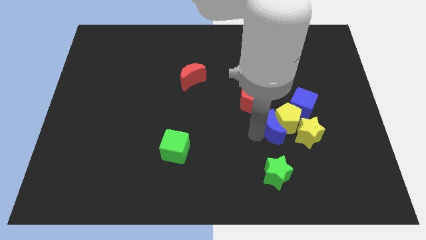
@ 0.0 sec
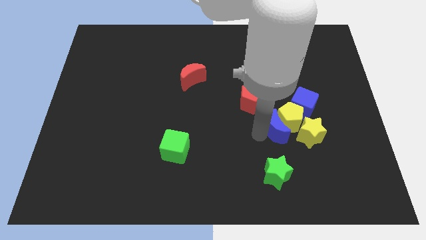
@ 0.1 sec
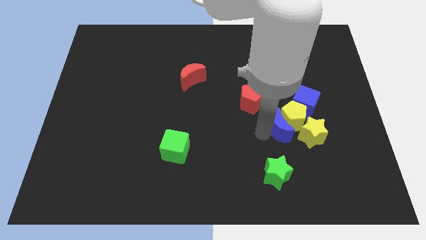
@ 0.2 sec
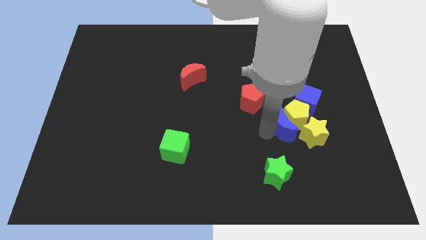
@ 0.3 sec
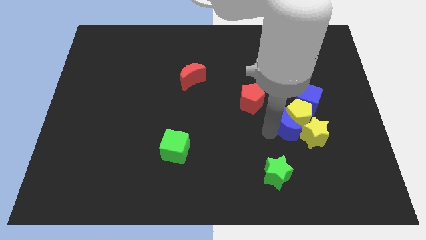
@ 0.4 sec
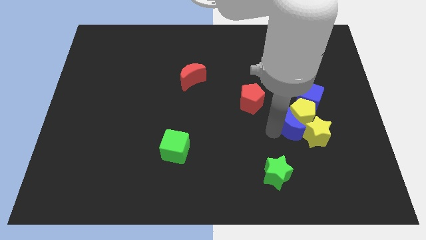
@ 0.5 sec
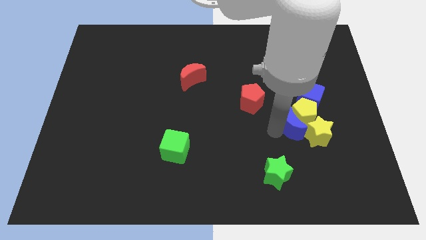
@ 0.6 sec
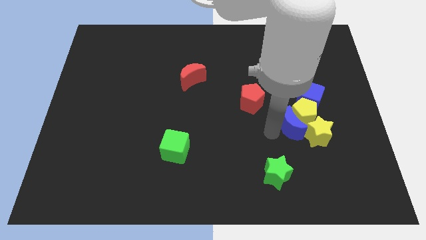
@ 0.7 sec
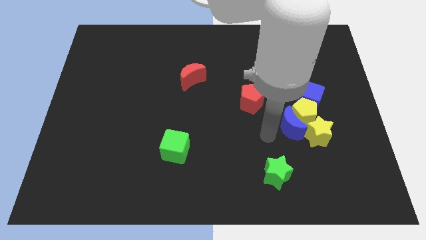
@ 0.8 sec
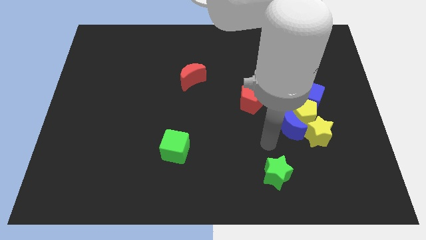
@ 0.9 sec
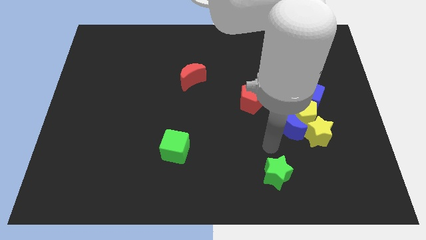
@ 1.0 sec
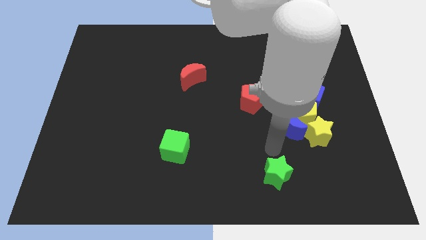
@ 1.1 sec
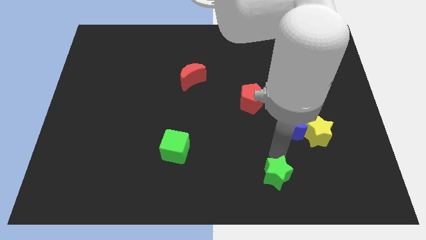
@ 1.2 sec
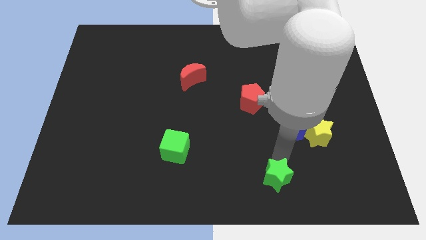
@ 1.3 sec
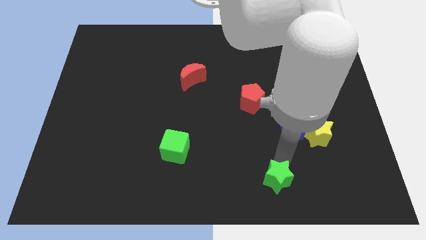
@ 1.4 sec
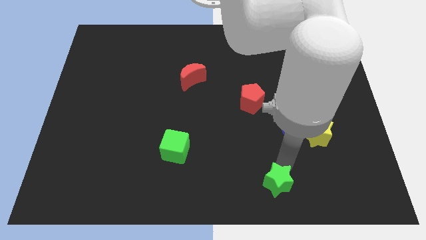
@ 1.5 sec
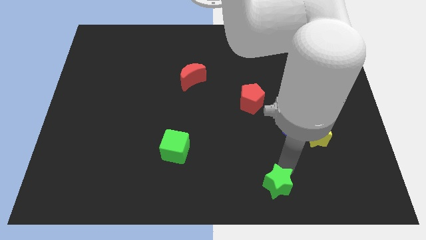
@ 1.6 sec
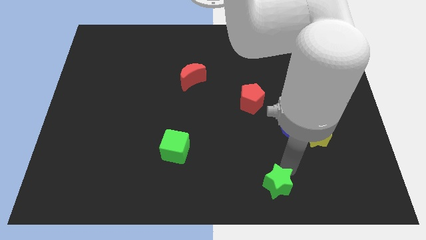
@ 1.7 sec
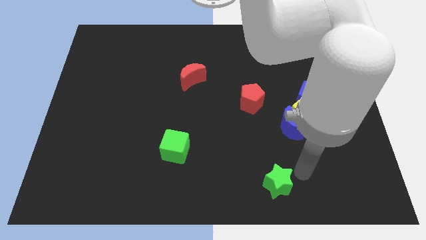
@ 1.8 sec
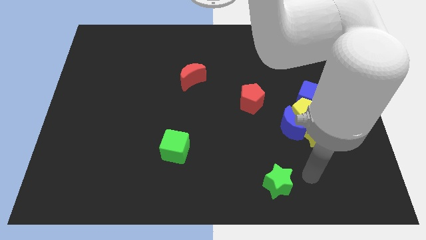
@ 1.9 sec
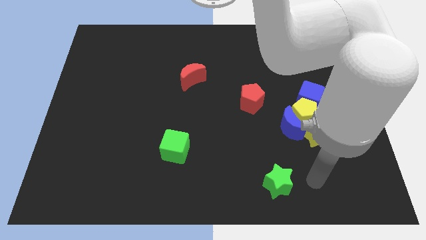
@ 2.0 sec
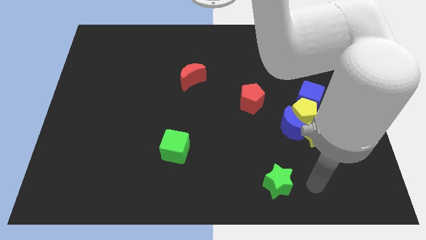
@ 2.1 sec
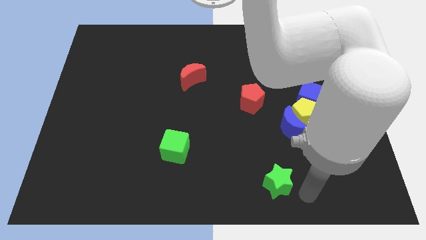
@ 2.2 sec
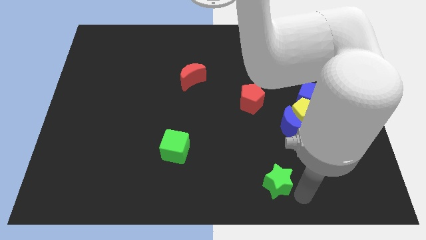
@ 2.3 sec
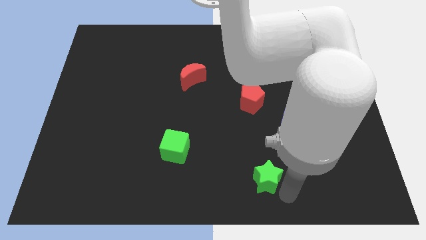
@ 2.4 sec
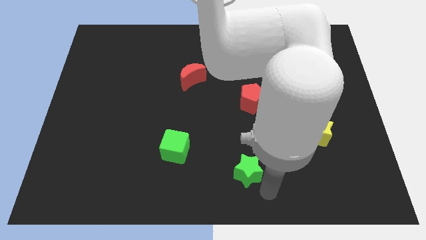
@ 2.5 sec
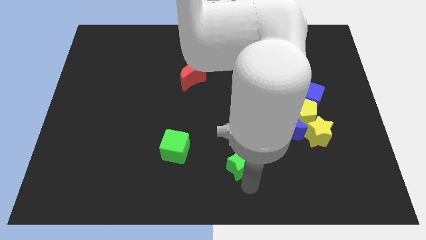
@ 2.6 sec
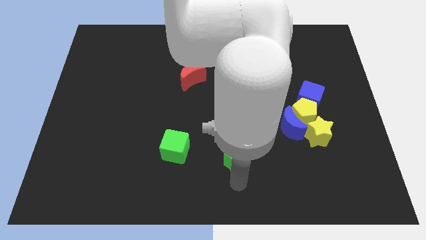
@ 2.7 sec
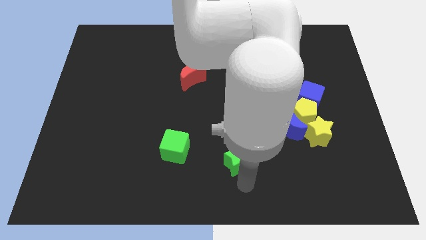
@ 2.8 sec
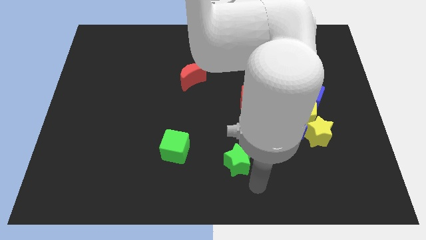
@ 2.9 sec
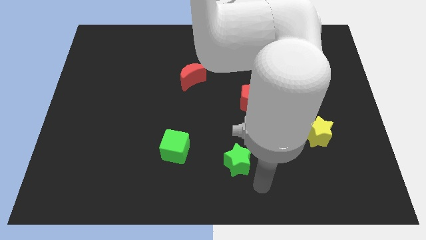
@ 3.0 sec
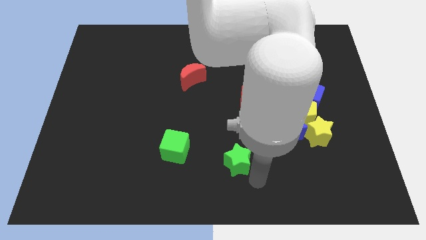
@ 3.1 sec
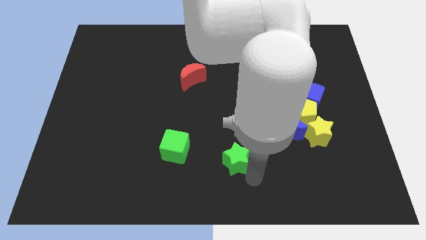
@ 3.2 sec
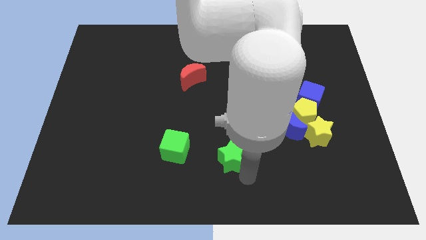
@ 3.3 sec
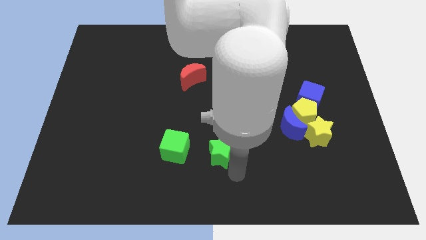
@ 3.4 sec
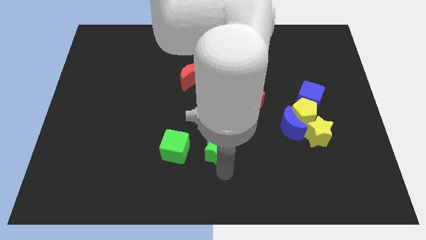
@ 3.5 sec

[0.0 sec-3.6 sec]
place the green star right to the green cube

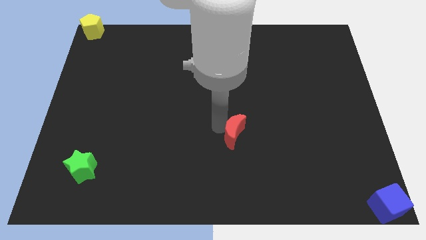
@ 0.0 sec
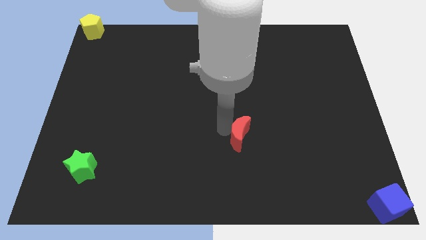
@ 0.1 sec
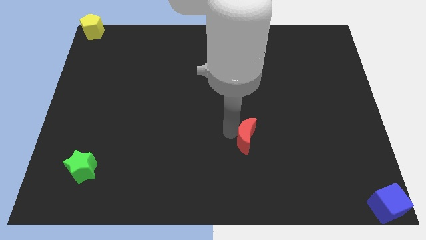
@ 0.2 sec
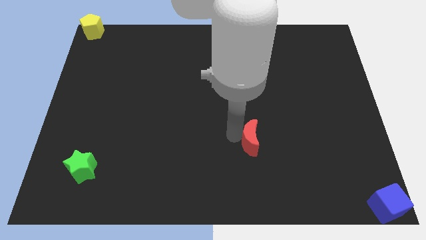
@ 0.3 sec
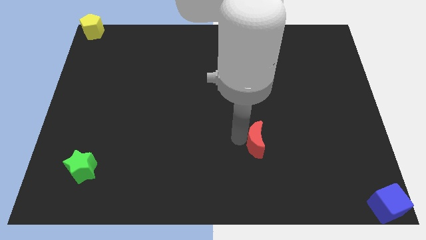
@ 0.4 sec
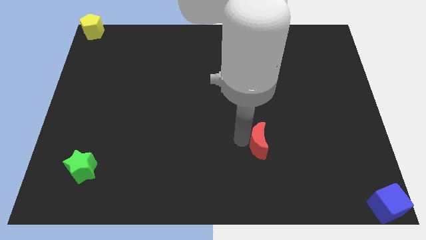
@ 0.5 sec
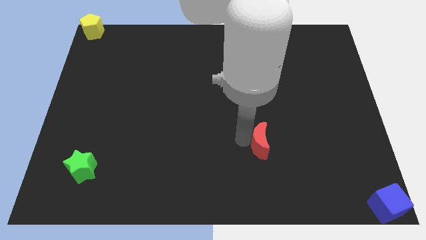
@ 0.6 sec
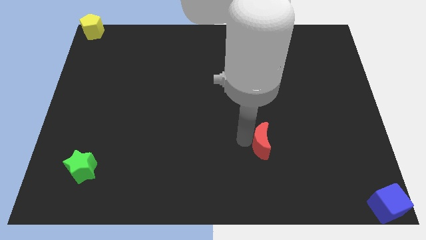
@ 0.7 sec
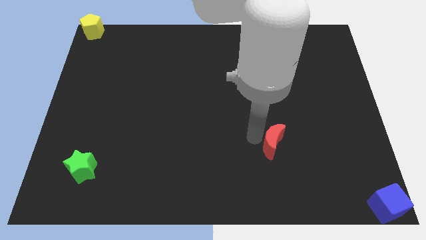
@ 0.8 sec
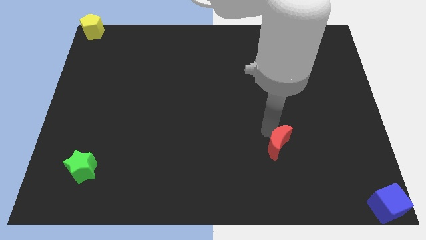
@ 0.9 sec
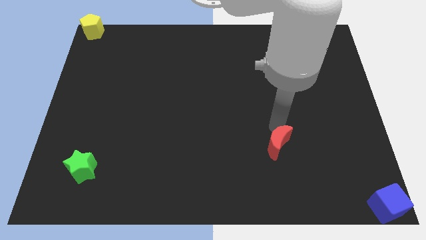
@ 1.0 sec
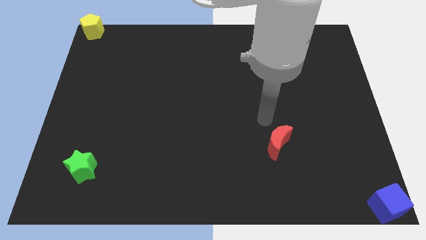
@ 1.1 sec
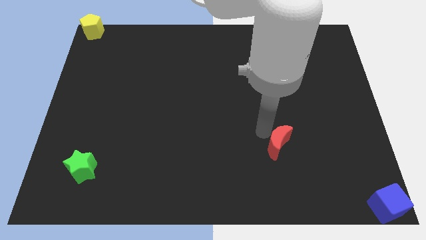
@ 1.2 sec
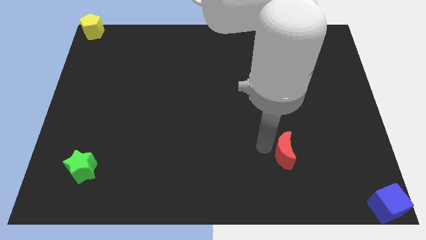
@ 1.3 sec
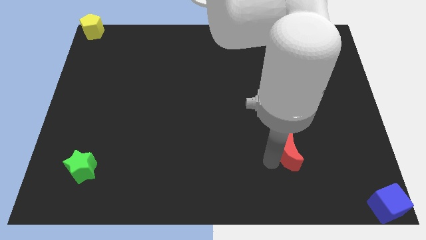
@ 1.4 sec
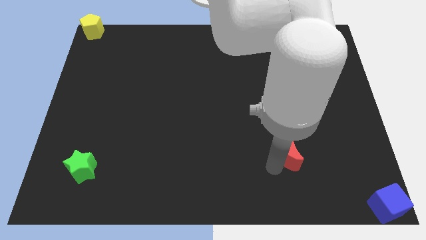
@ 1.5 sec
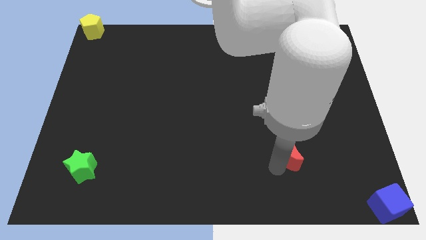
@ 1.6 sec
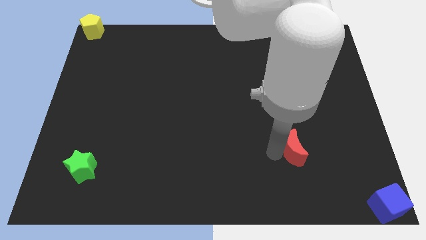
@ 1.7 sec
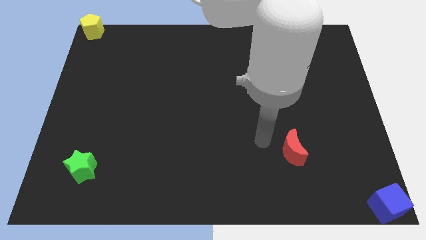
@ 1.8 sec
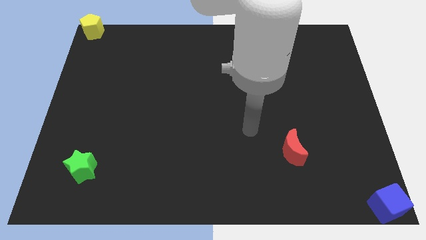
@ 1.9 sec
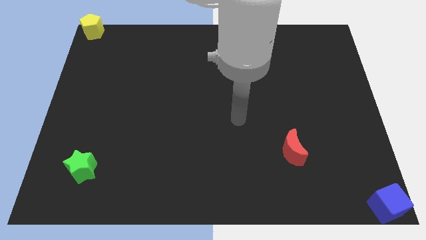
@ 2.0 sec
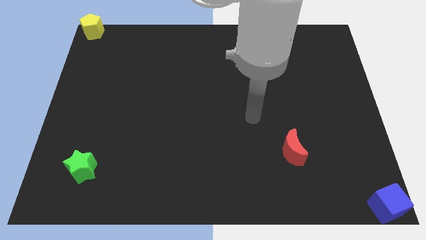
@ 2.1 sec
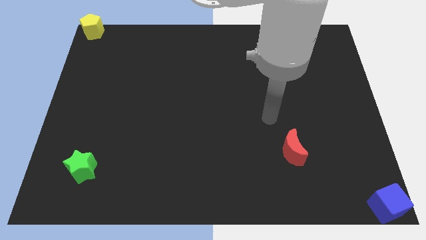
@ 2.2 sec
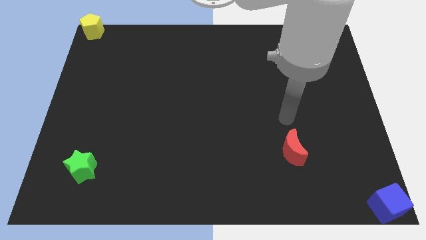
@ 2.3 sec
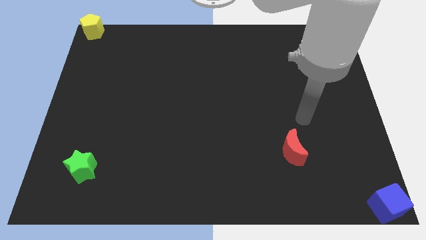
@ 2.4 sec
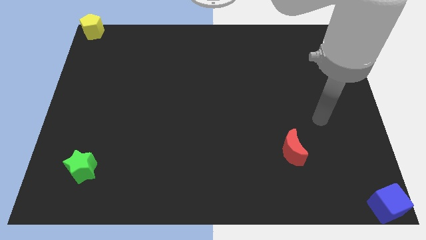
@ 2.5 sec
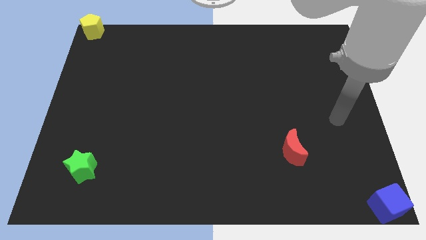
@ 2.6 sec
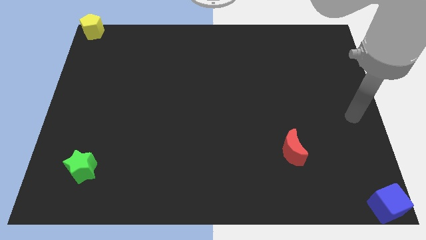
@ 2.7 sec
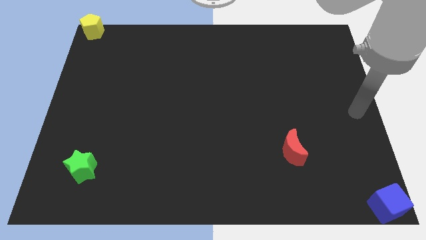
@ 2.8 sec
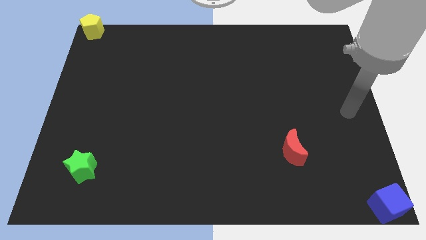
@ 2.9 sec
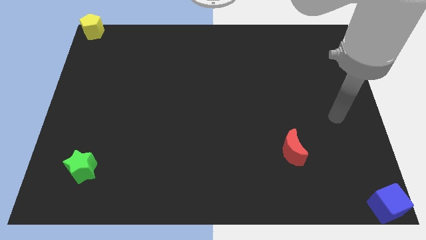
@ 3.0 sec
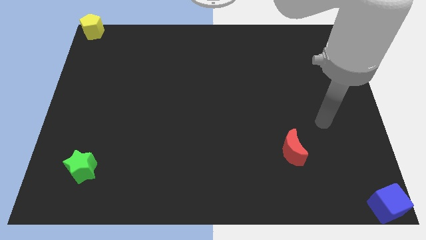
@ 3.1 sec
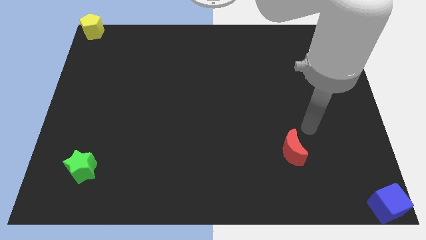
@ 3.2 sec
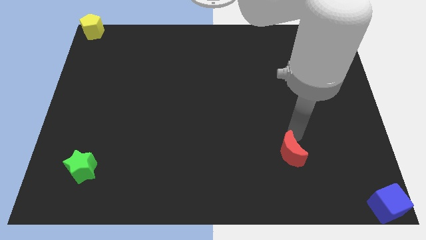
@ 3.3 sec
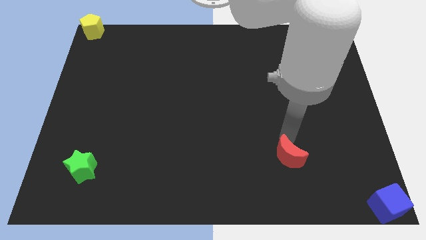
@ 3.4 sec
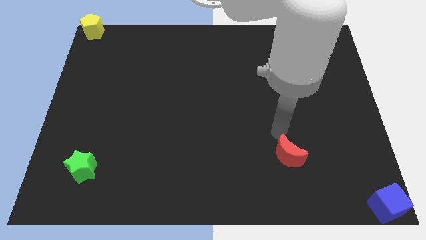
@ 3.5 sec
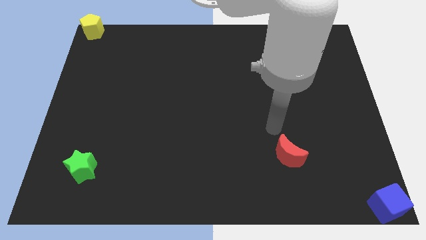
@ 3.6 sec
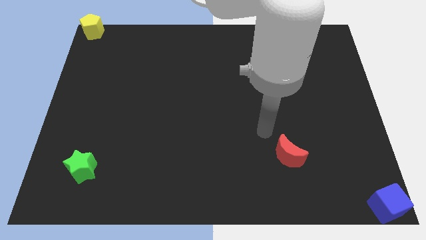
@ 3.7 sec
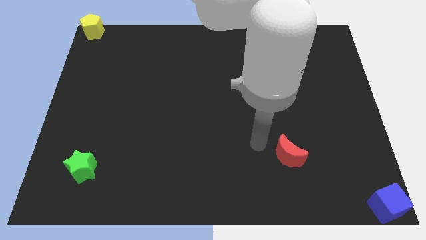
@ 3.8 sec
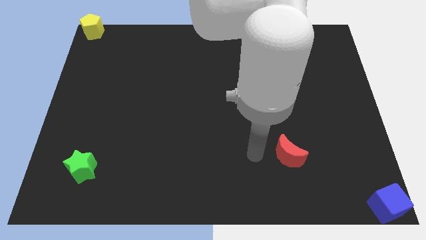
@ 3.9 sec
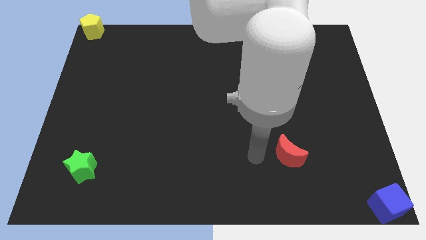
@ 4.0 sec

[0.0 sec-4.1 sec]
drag the red moon slightly to the right

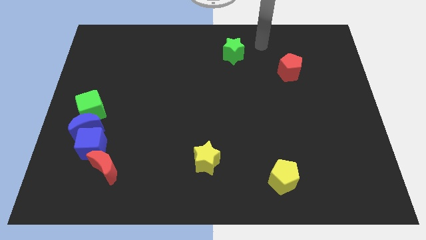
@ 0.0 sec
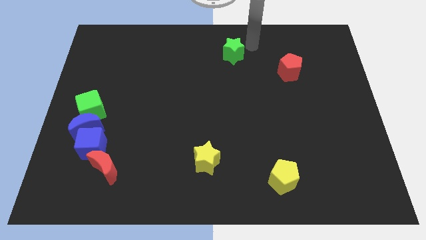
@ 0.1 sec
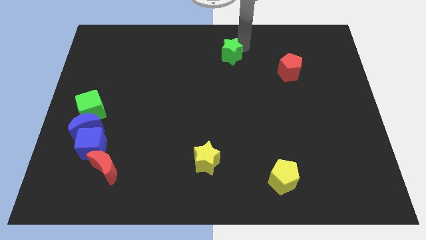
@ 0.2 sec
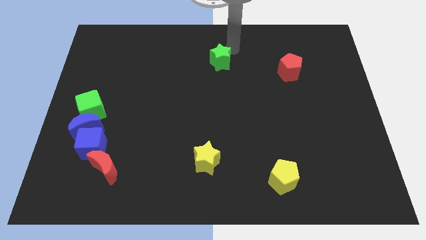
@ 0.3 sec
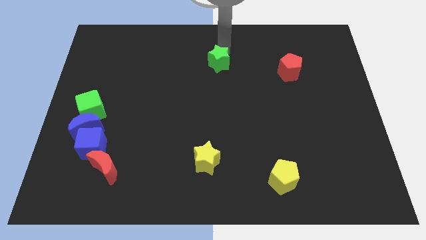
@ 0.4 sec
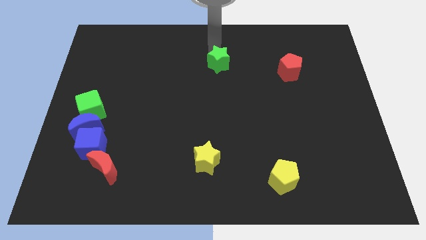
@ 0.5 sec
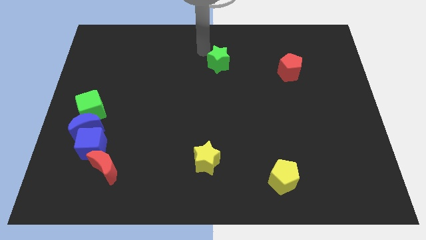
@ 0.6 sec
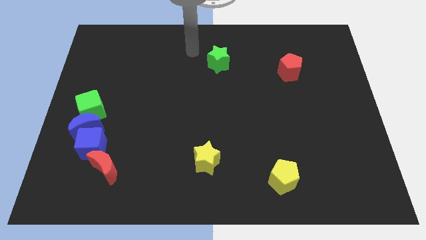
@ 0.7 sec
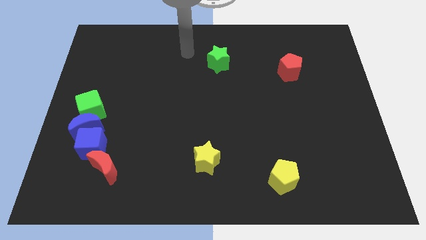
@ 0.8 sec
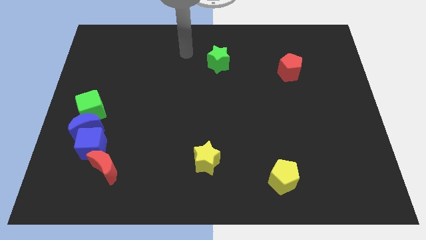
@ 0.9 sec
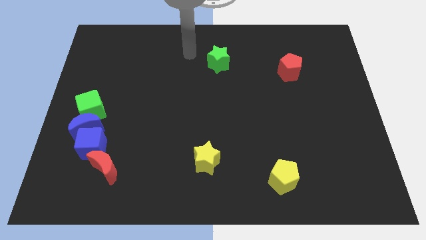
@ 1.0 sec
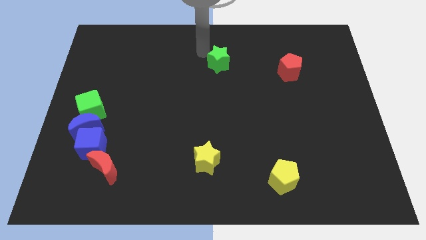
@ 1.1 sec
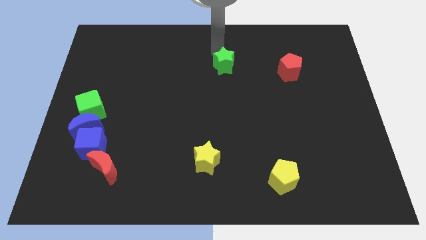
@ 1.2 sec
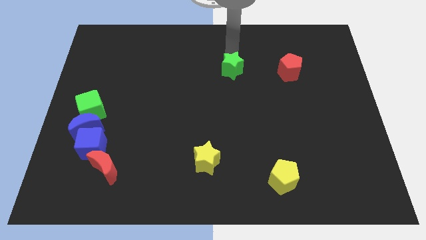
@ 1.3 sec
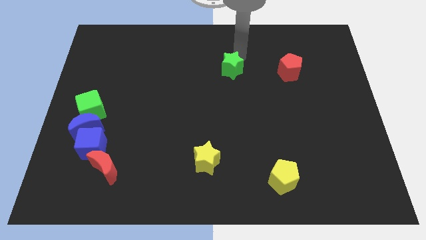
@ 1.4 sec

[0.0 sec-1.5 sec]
move the green star to the bottom of the board
